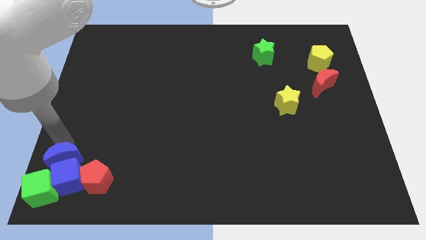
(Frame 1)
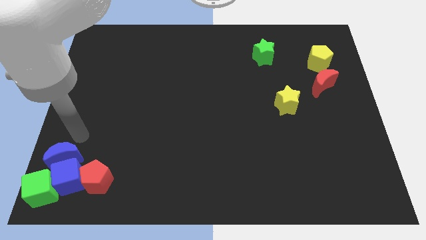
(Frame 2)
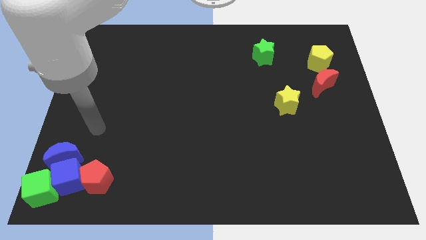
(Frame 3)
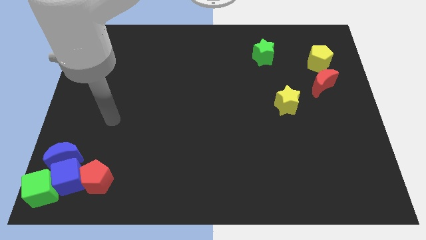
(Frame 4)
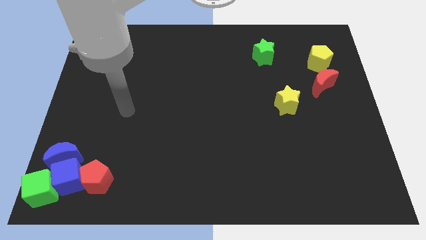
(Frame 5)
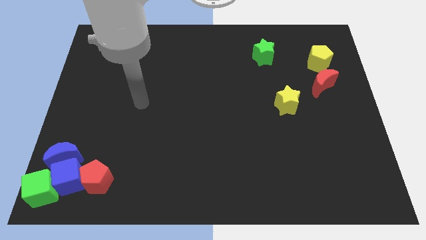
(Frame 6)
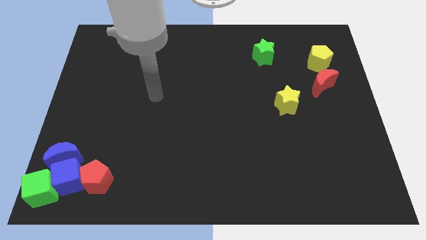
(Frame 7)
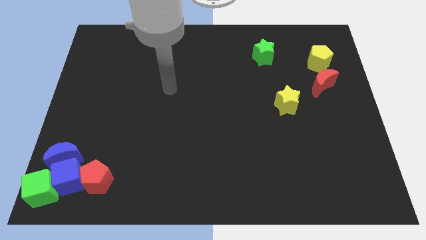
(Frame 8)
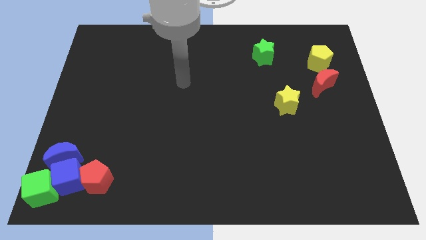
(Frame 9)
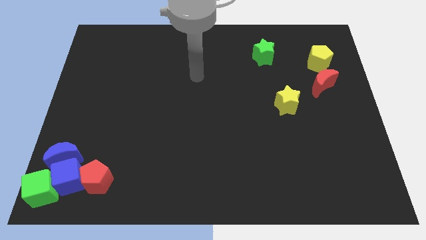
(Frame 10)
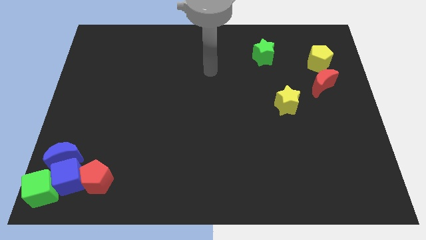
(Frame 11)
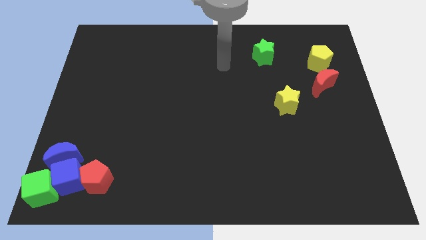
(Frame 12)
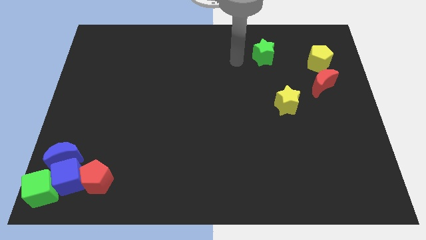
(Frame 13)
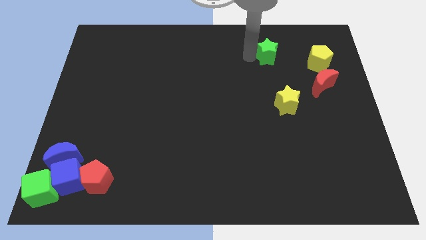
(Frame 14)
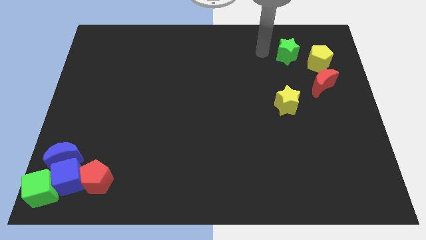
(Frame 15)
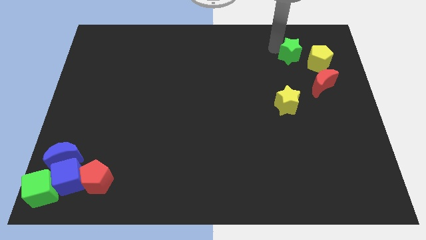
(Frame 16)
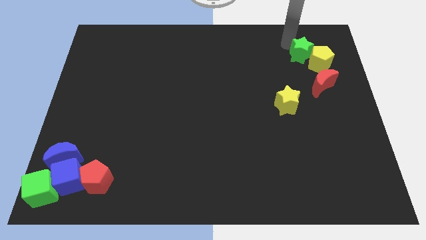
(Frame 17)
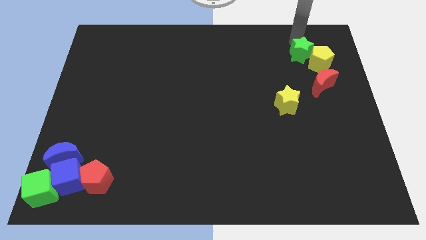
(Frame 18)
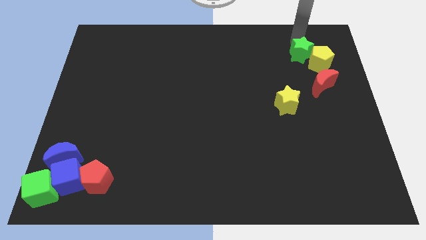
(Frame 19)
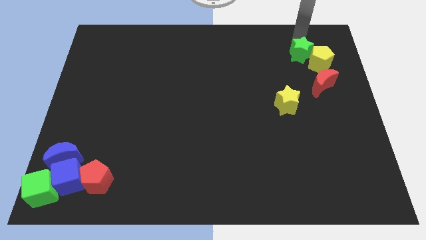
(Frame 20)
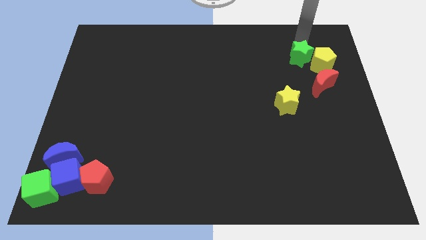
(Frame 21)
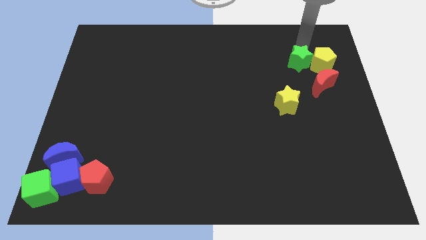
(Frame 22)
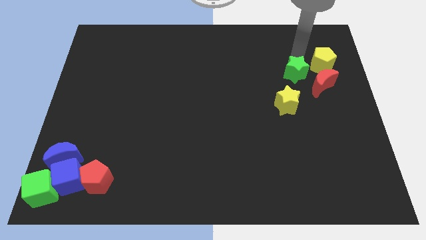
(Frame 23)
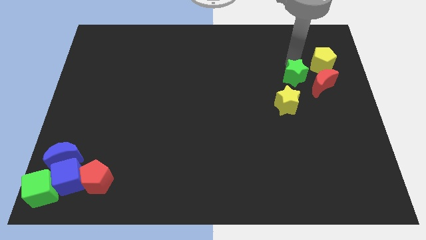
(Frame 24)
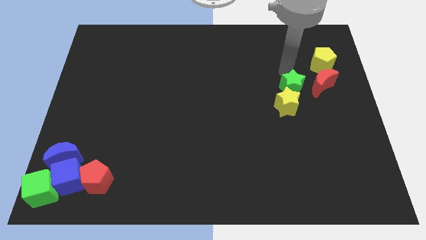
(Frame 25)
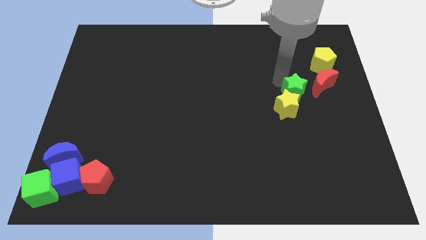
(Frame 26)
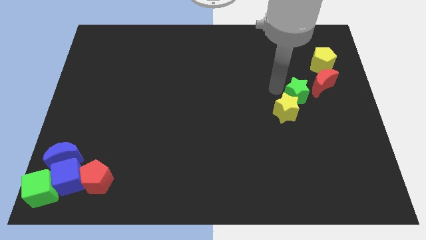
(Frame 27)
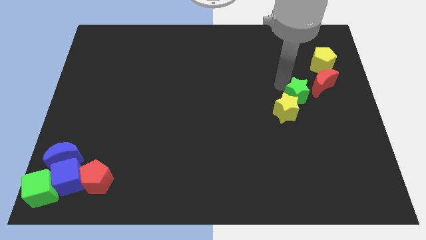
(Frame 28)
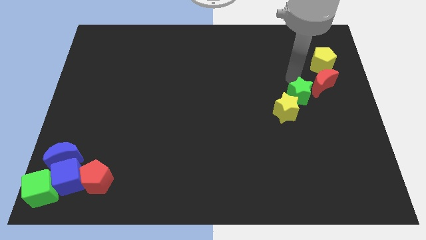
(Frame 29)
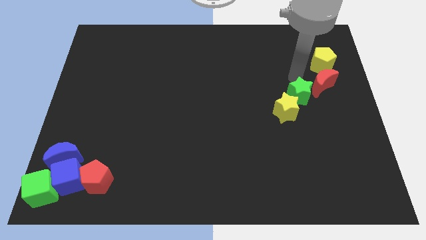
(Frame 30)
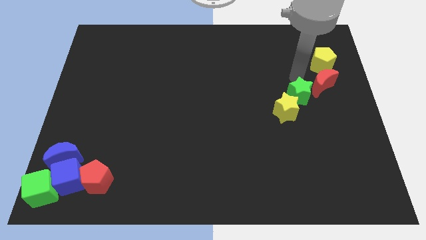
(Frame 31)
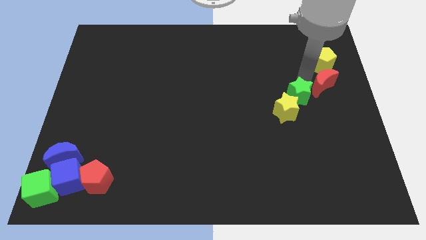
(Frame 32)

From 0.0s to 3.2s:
slightly move down the green star

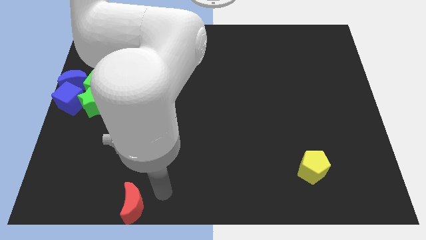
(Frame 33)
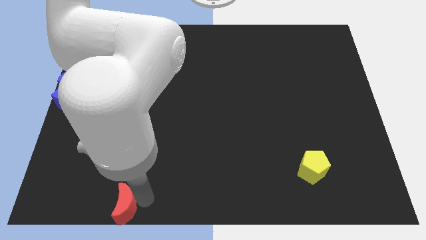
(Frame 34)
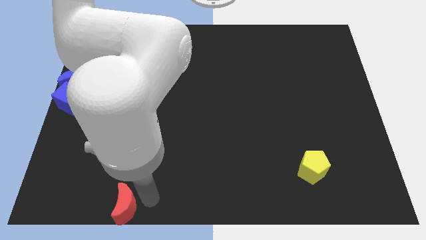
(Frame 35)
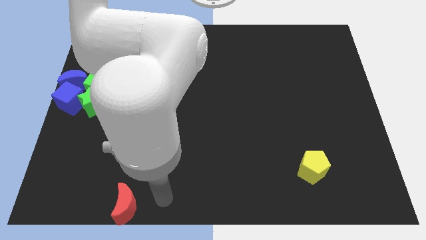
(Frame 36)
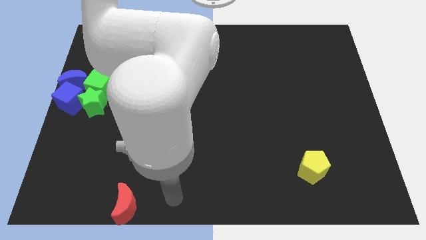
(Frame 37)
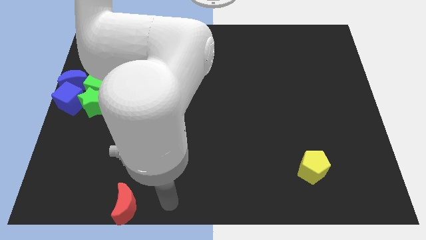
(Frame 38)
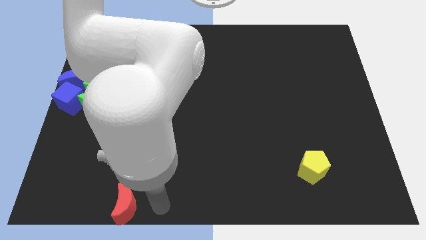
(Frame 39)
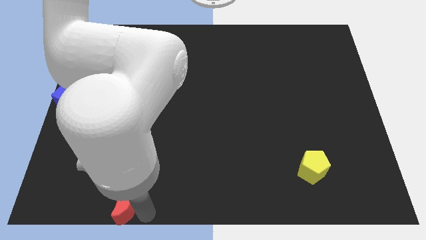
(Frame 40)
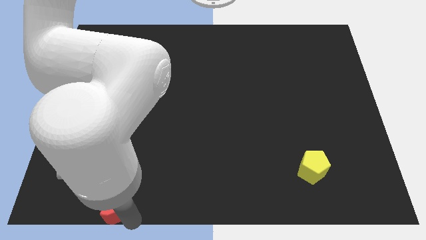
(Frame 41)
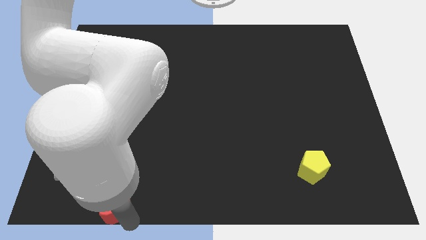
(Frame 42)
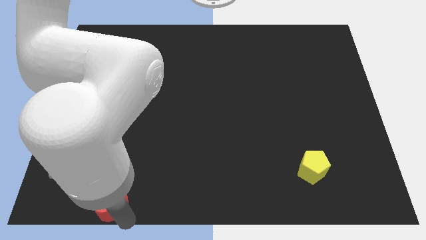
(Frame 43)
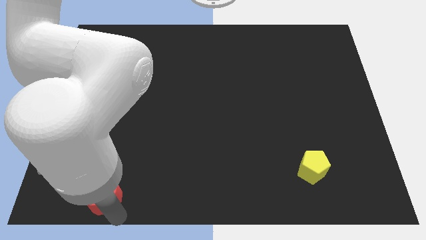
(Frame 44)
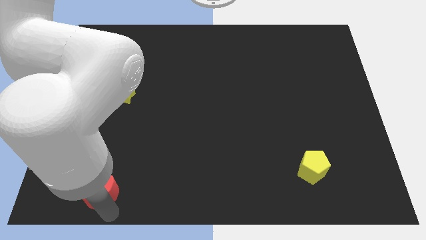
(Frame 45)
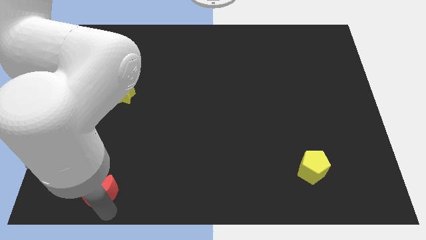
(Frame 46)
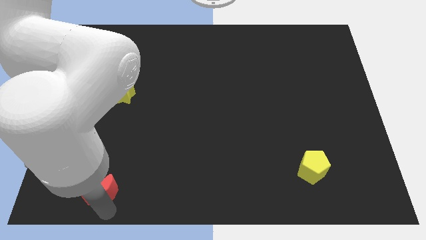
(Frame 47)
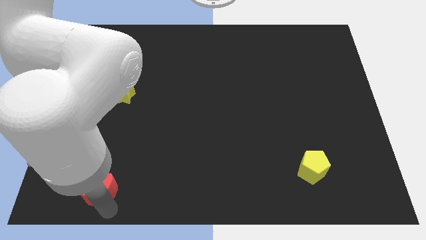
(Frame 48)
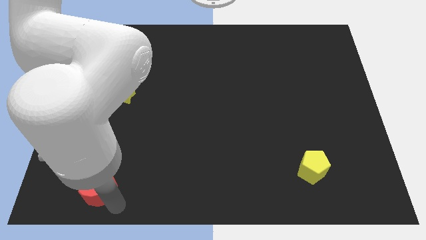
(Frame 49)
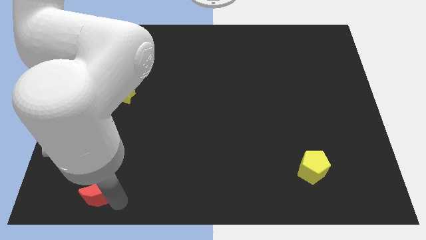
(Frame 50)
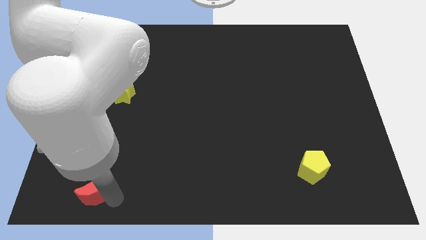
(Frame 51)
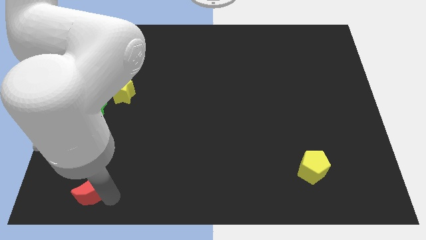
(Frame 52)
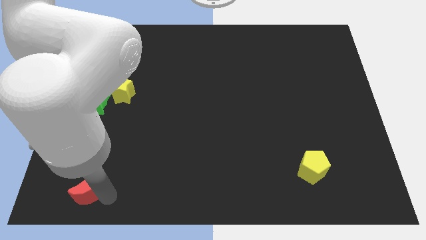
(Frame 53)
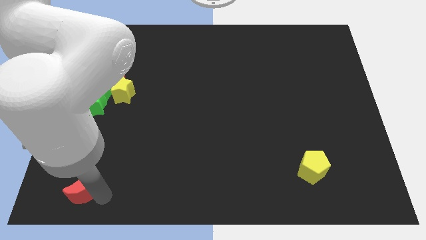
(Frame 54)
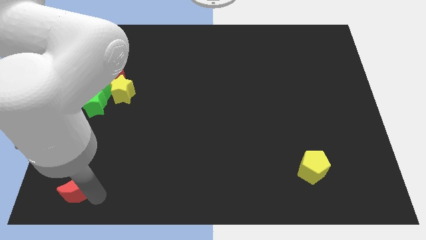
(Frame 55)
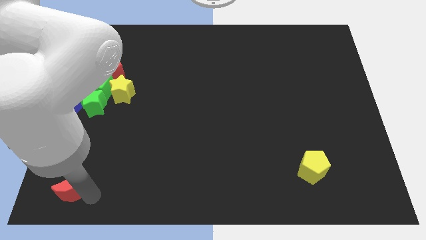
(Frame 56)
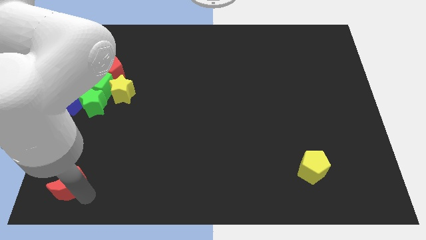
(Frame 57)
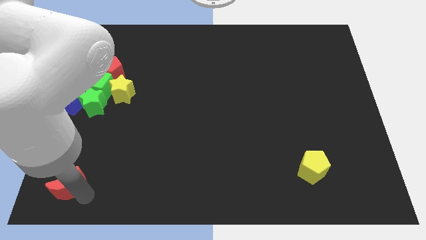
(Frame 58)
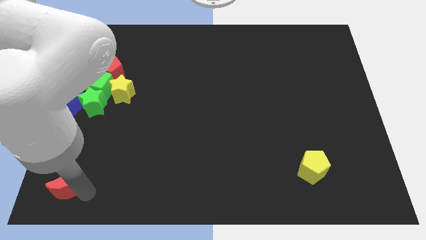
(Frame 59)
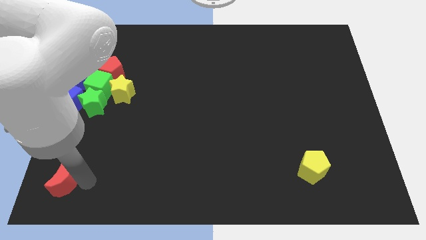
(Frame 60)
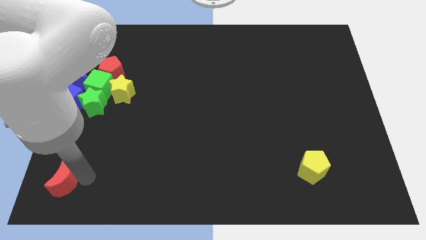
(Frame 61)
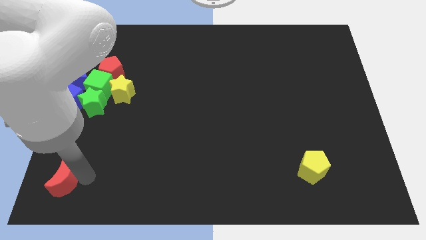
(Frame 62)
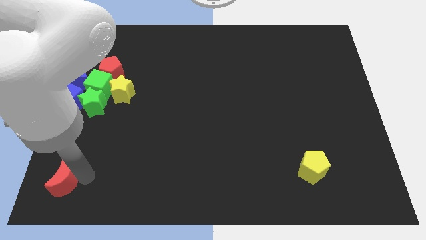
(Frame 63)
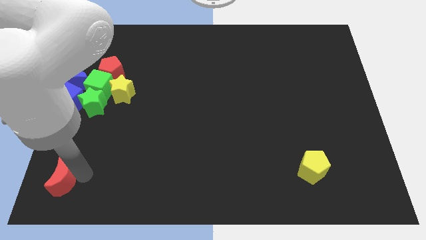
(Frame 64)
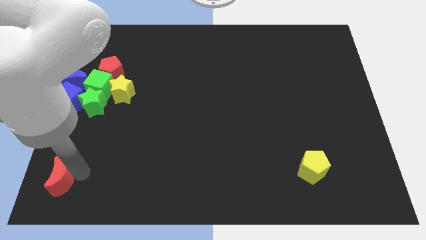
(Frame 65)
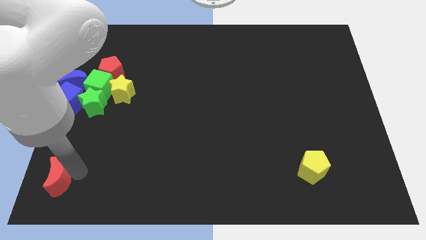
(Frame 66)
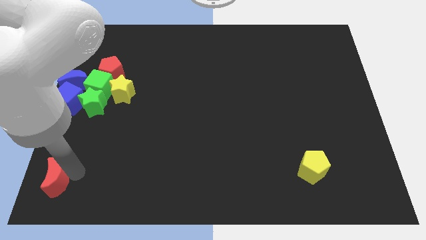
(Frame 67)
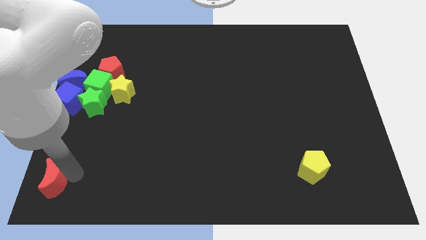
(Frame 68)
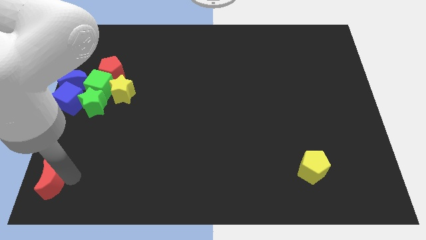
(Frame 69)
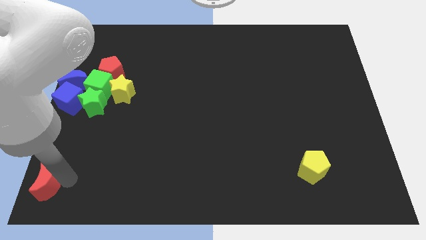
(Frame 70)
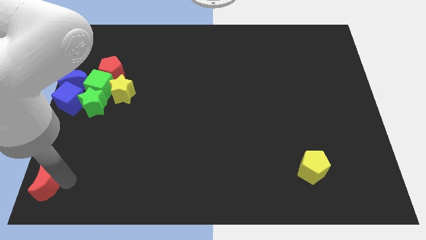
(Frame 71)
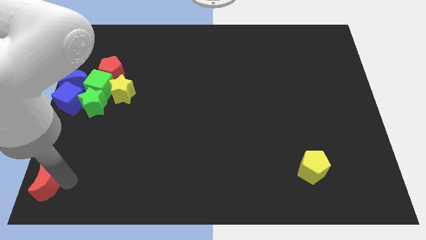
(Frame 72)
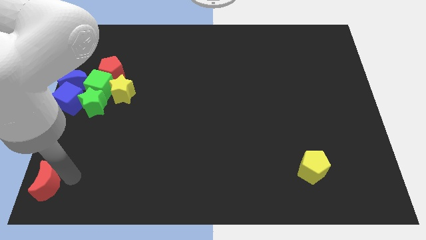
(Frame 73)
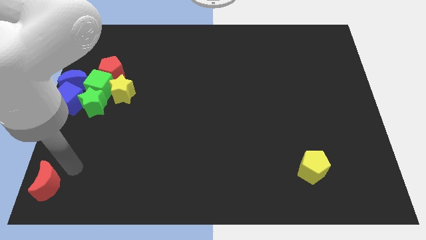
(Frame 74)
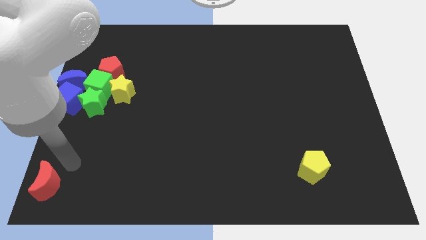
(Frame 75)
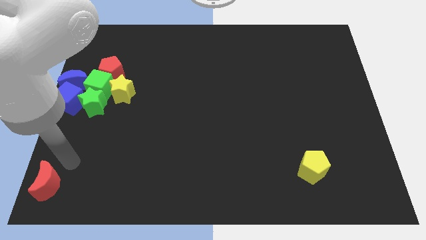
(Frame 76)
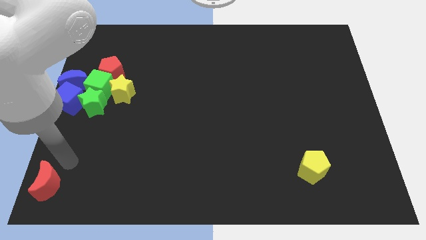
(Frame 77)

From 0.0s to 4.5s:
move the red crescent to the bottom left of the board

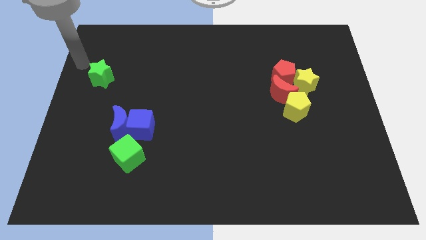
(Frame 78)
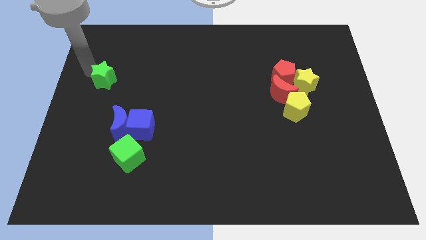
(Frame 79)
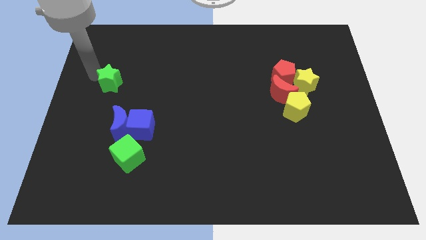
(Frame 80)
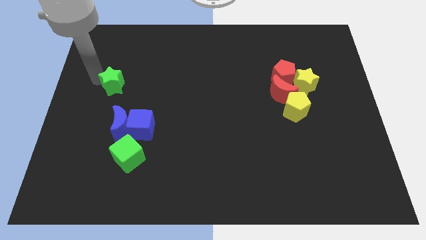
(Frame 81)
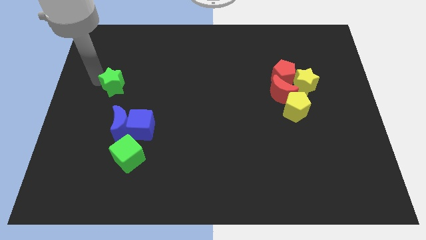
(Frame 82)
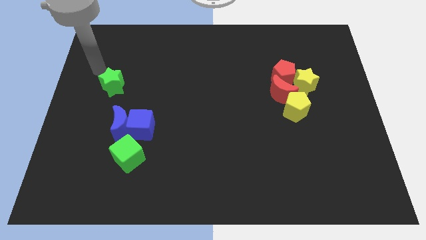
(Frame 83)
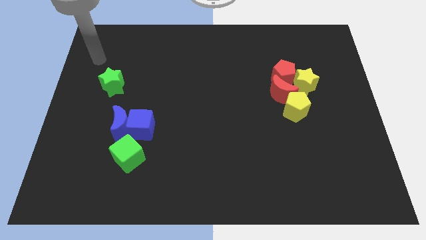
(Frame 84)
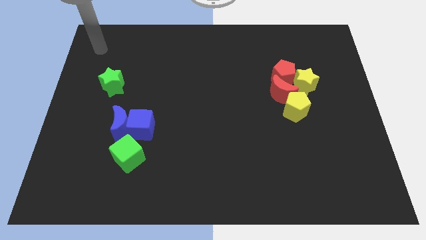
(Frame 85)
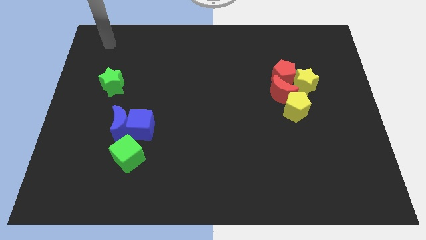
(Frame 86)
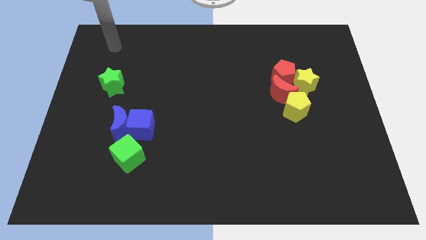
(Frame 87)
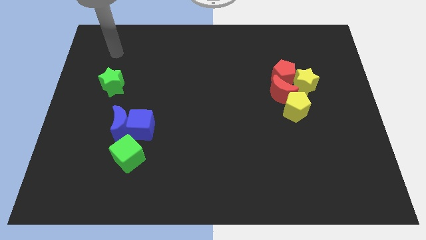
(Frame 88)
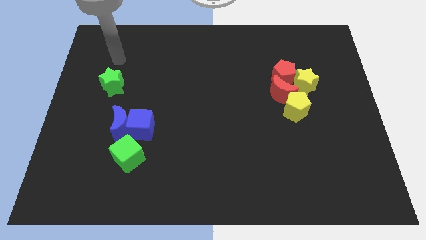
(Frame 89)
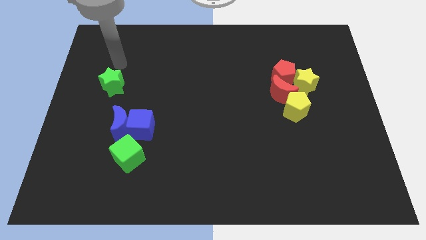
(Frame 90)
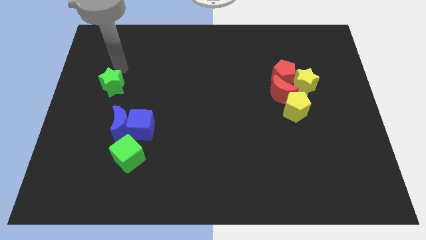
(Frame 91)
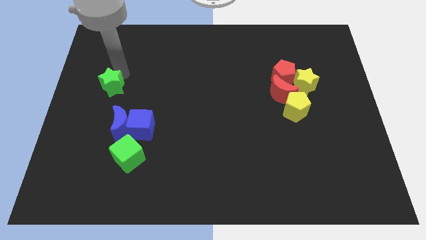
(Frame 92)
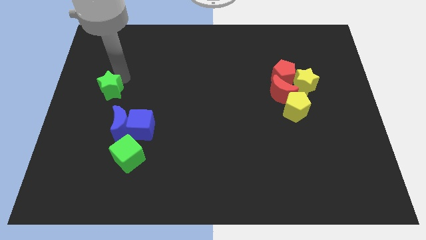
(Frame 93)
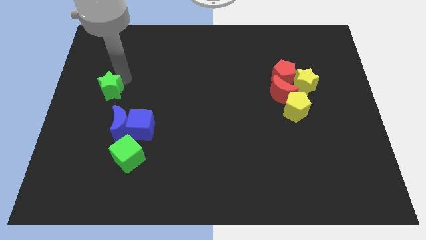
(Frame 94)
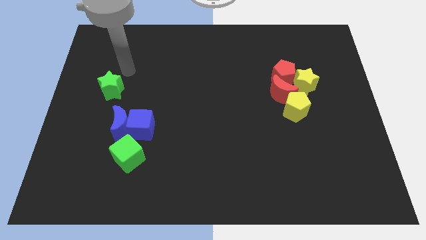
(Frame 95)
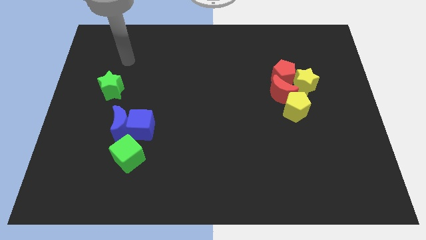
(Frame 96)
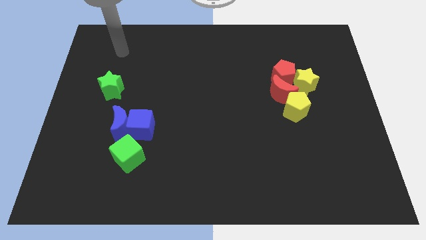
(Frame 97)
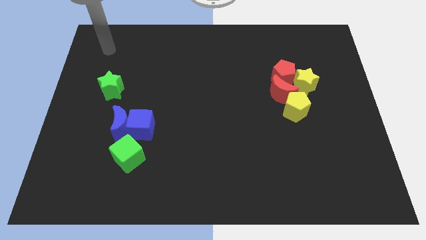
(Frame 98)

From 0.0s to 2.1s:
move the green star slightly to the bottom
